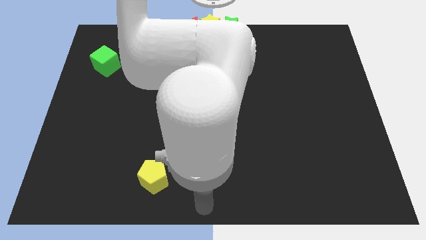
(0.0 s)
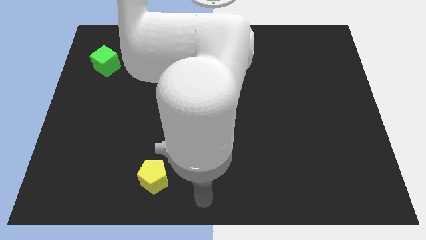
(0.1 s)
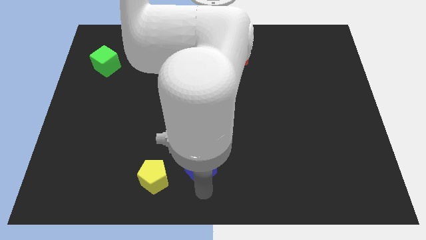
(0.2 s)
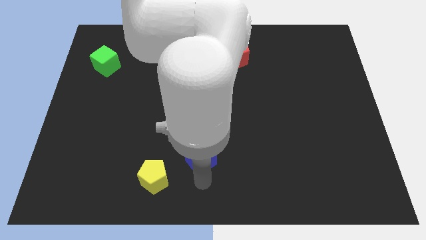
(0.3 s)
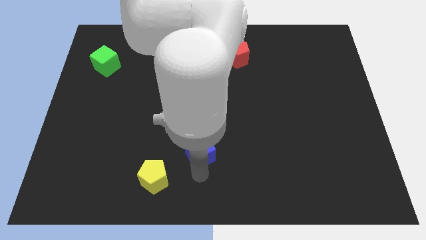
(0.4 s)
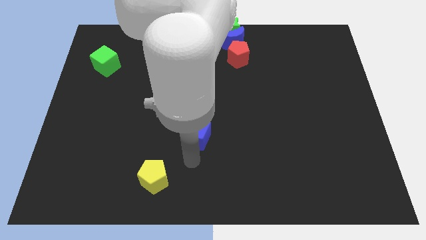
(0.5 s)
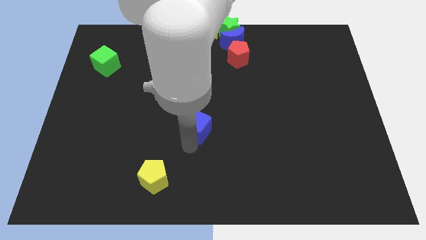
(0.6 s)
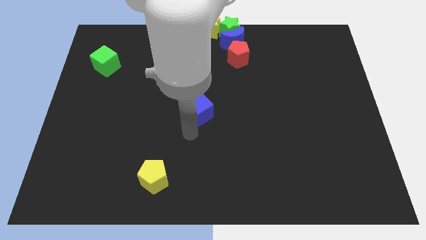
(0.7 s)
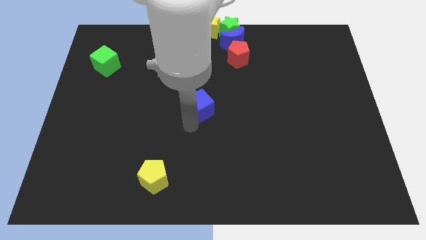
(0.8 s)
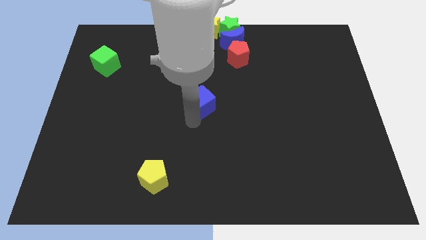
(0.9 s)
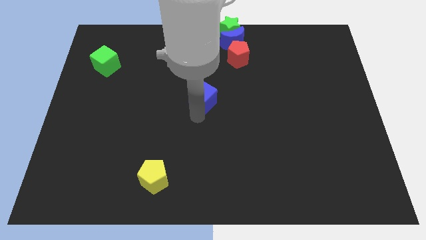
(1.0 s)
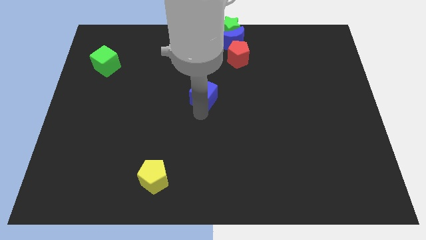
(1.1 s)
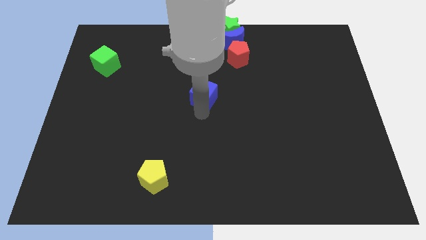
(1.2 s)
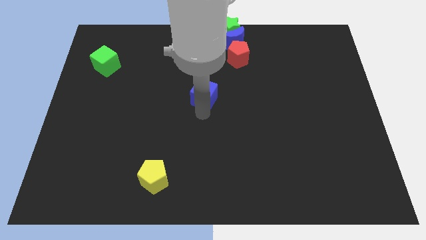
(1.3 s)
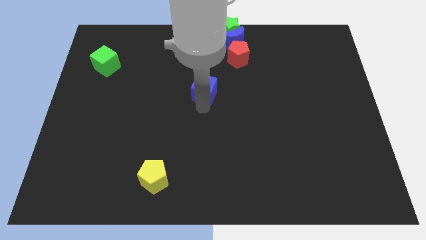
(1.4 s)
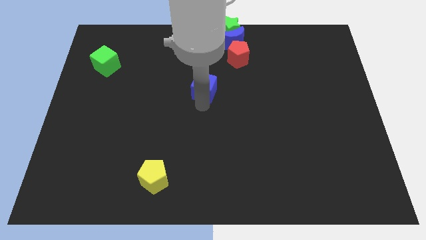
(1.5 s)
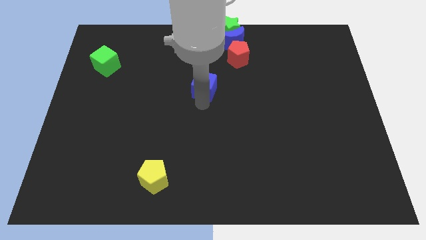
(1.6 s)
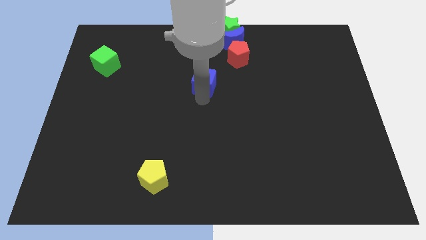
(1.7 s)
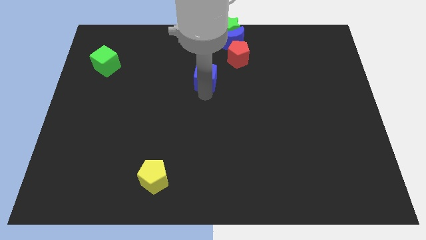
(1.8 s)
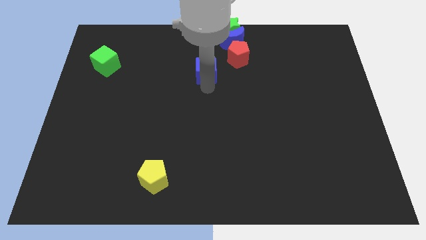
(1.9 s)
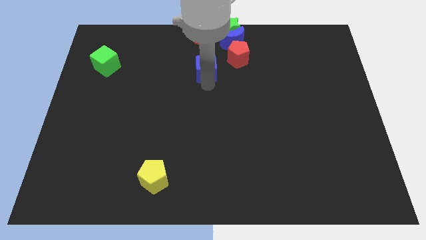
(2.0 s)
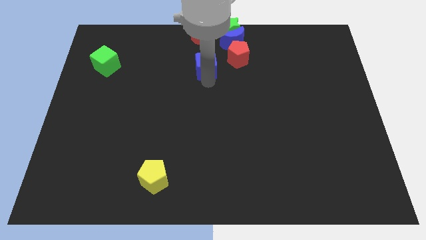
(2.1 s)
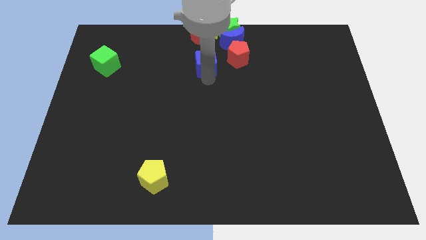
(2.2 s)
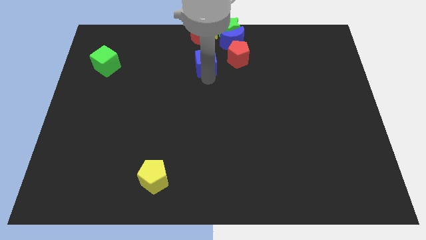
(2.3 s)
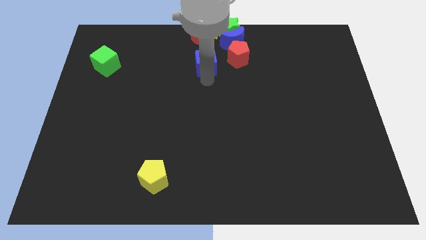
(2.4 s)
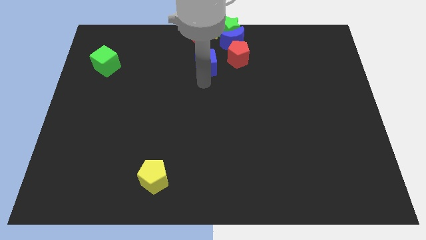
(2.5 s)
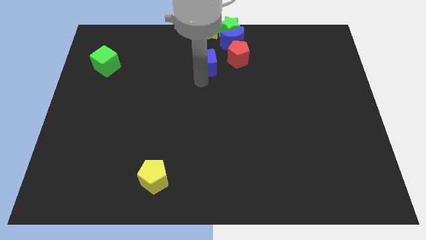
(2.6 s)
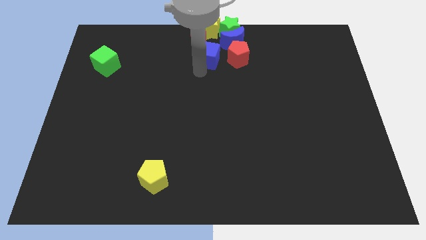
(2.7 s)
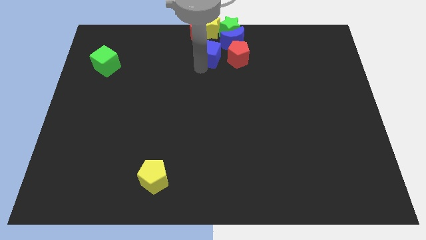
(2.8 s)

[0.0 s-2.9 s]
move the blue cube to the left of red pentagon

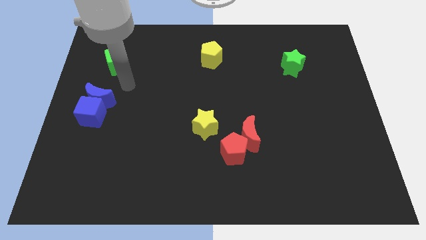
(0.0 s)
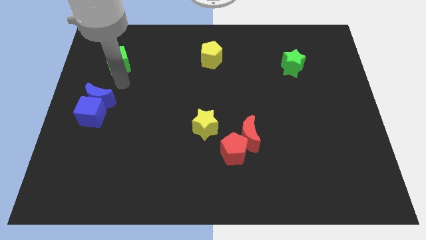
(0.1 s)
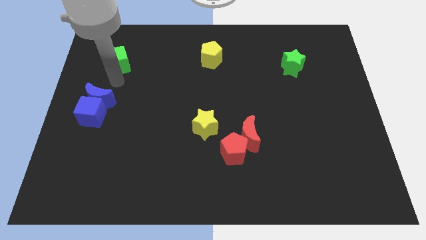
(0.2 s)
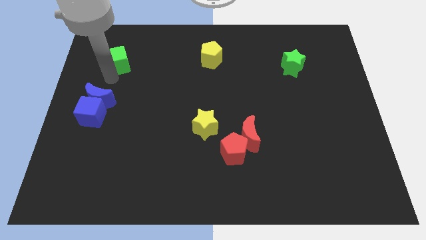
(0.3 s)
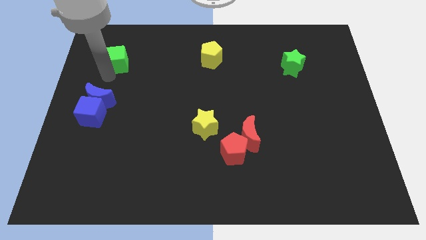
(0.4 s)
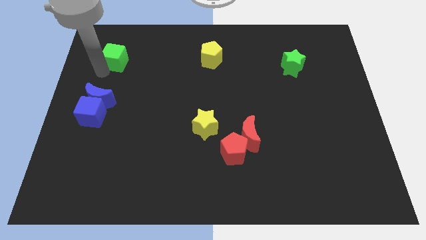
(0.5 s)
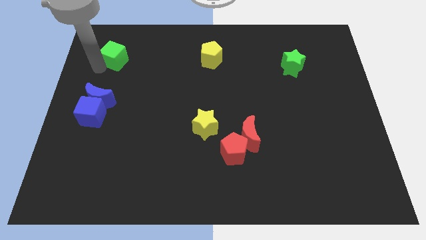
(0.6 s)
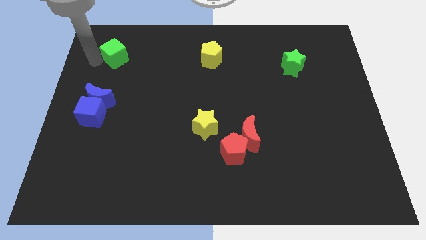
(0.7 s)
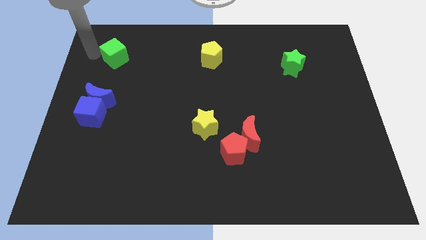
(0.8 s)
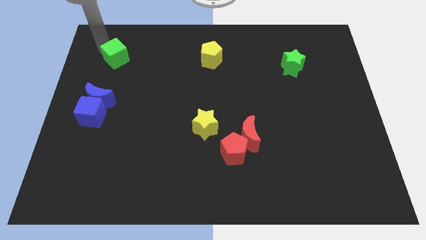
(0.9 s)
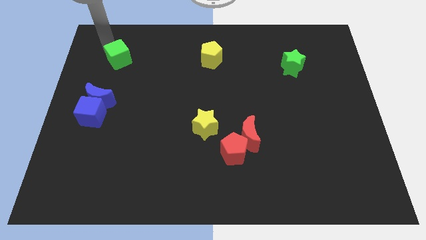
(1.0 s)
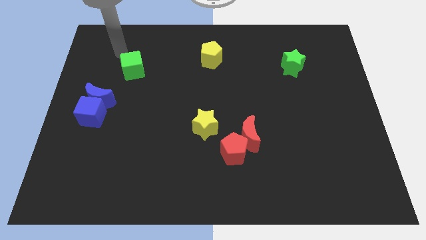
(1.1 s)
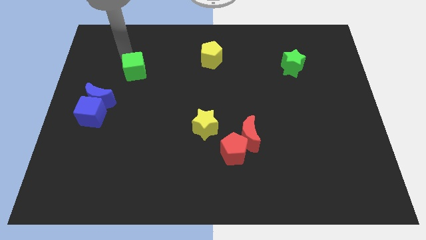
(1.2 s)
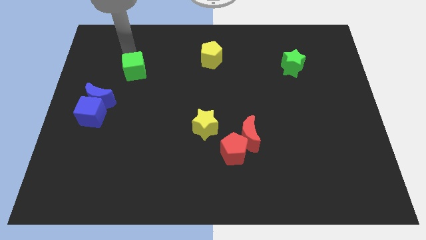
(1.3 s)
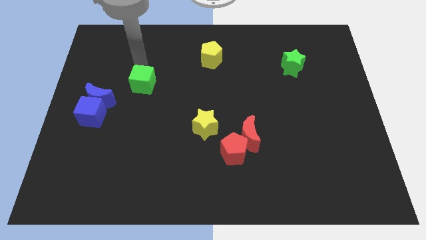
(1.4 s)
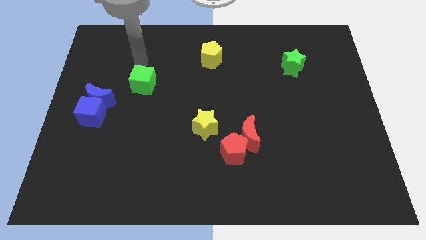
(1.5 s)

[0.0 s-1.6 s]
push the green cube to the right

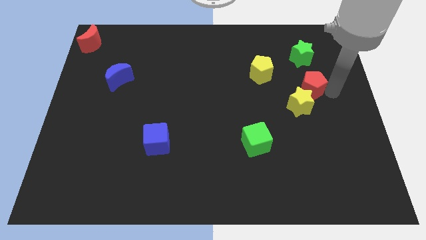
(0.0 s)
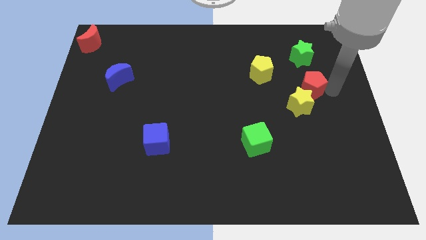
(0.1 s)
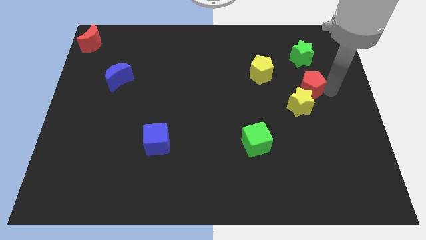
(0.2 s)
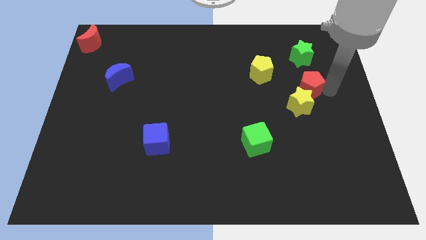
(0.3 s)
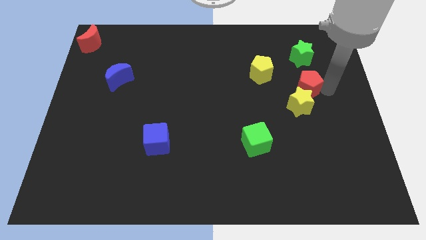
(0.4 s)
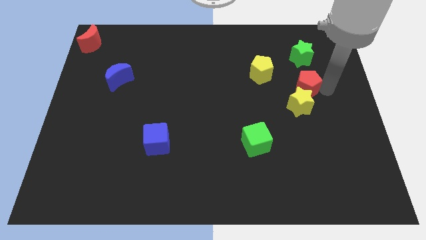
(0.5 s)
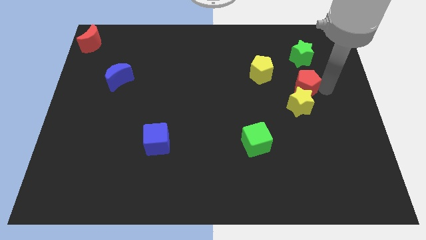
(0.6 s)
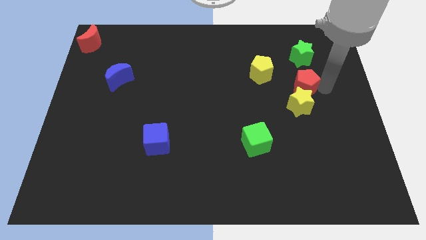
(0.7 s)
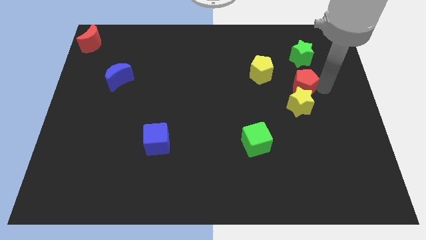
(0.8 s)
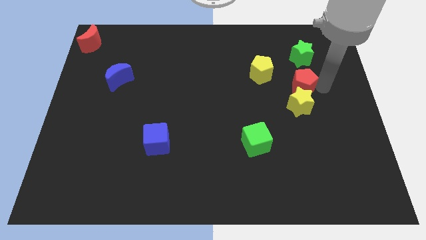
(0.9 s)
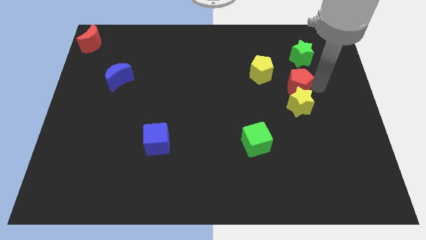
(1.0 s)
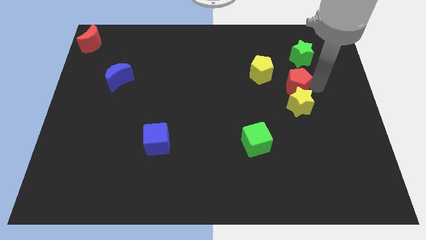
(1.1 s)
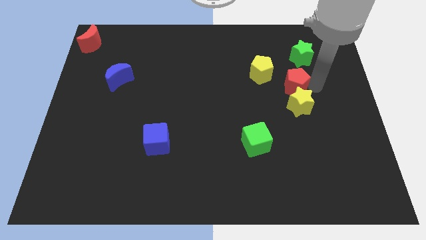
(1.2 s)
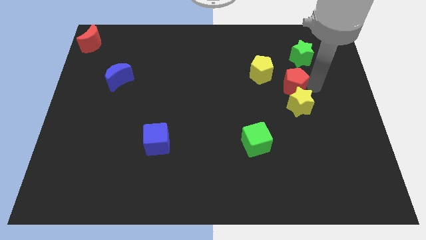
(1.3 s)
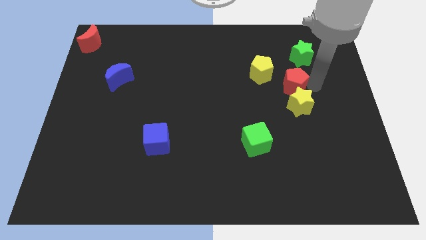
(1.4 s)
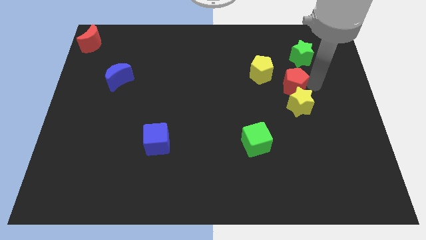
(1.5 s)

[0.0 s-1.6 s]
place the red pentagon in between green star and yellow star

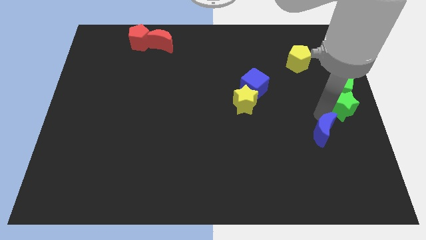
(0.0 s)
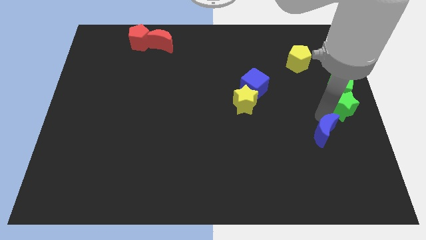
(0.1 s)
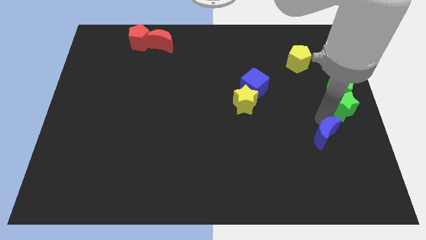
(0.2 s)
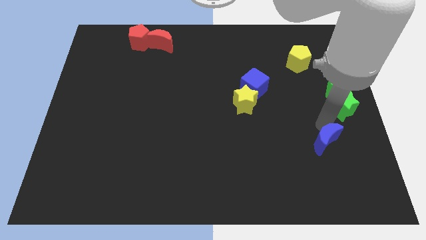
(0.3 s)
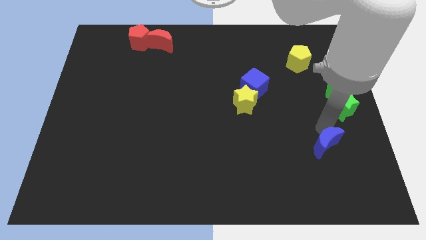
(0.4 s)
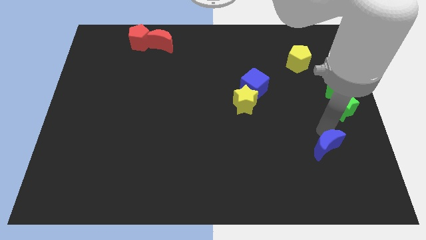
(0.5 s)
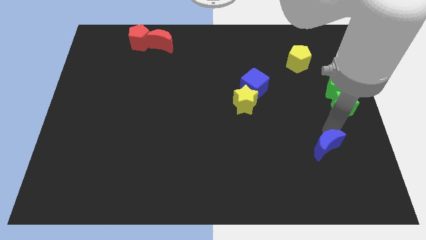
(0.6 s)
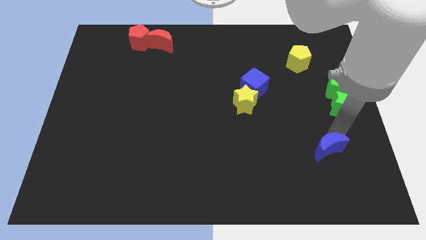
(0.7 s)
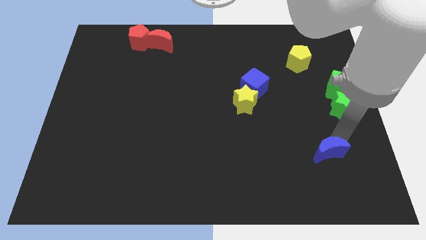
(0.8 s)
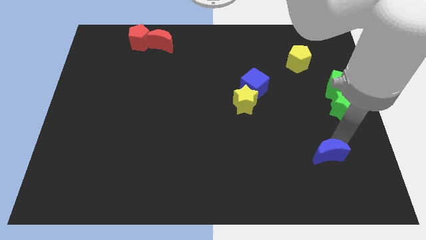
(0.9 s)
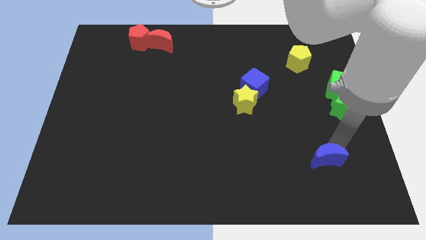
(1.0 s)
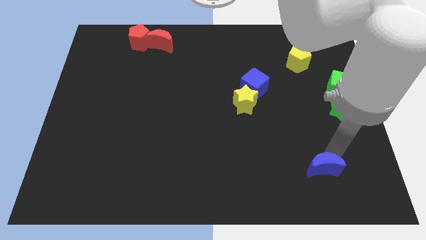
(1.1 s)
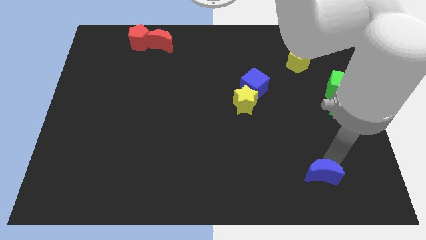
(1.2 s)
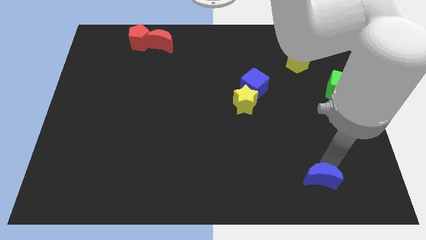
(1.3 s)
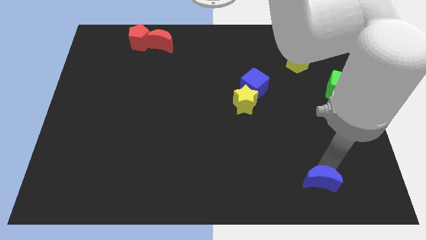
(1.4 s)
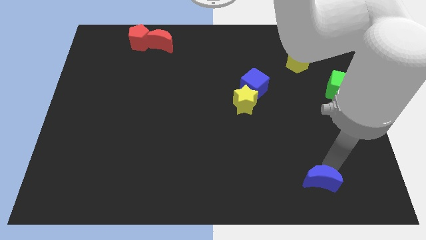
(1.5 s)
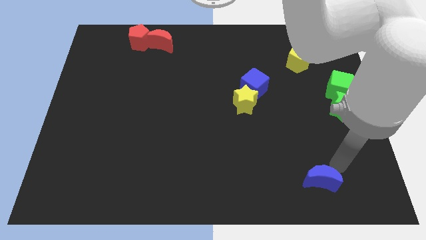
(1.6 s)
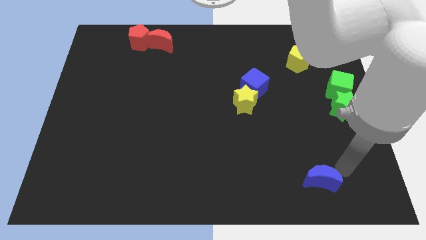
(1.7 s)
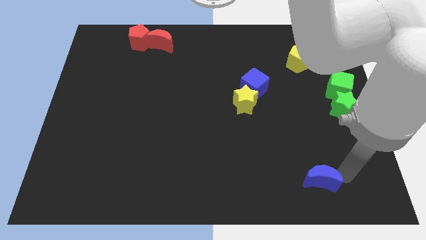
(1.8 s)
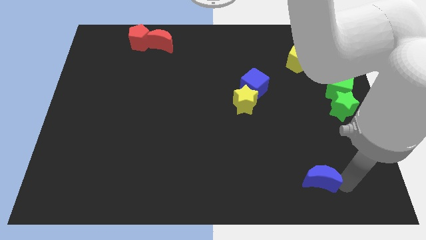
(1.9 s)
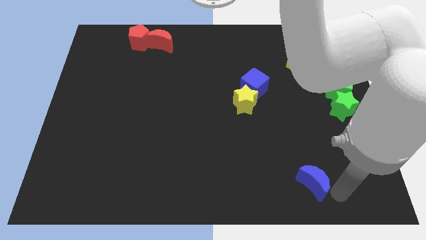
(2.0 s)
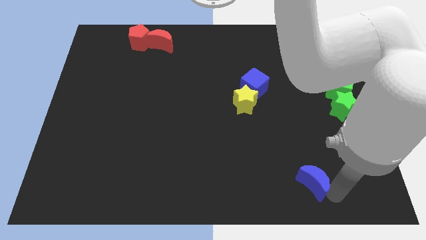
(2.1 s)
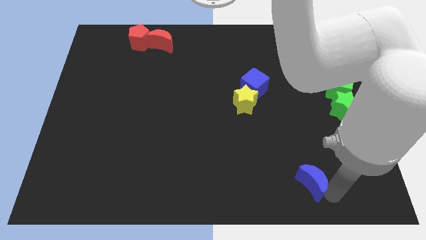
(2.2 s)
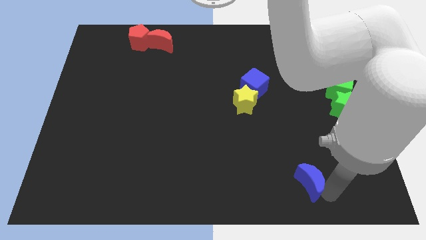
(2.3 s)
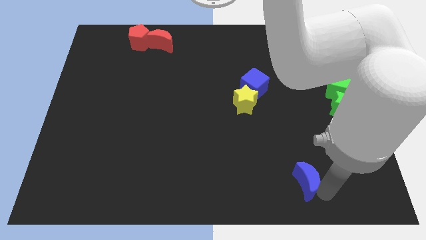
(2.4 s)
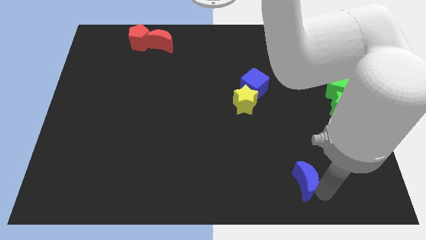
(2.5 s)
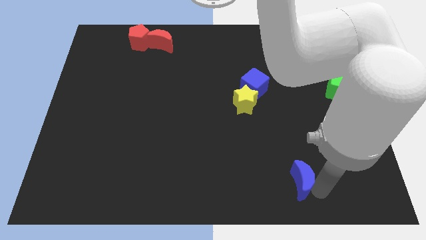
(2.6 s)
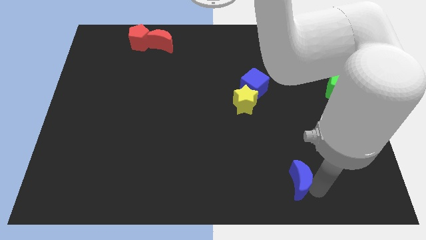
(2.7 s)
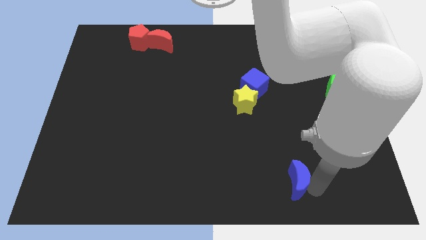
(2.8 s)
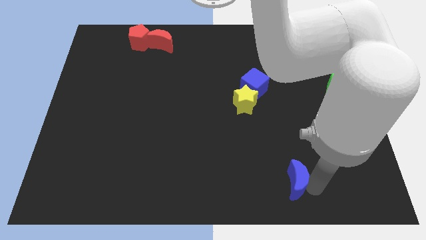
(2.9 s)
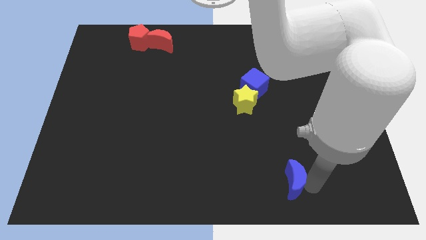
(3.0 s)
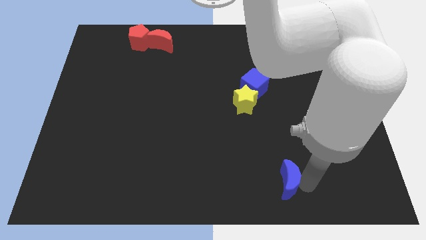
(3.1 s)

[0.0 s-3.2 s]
push the blue moon towards the left side of the board
